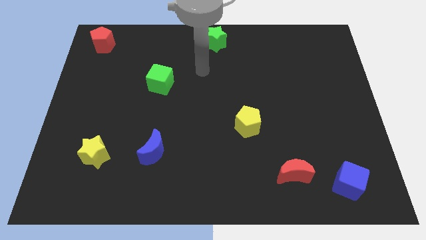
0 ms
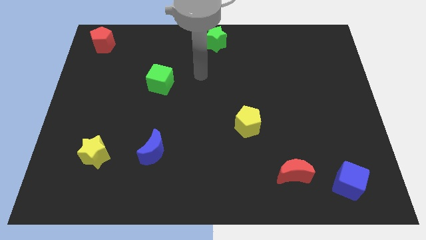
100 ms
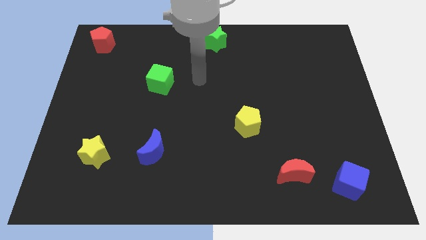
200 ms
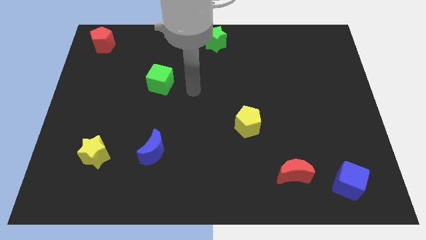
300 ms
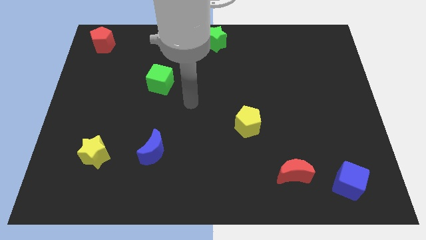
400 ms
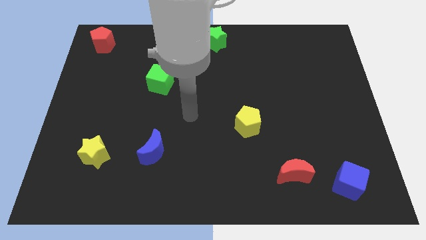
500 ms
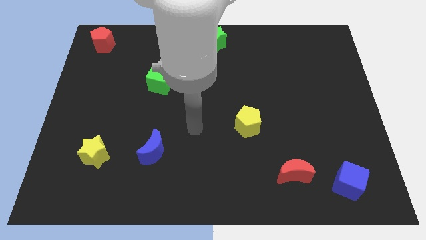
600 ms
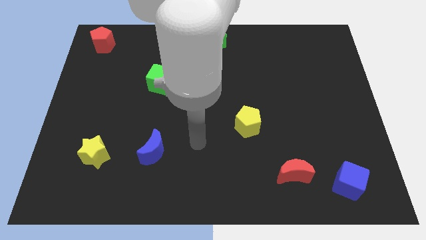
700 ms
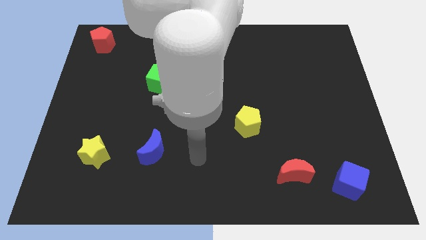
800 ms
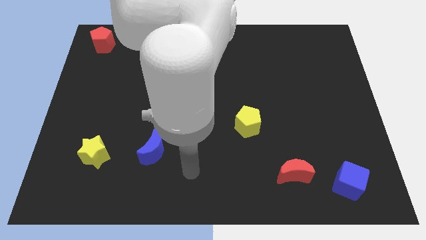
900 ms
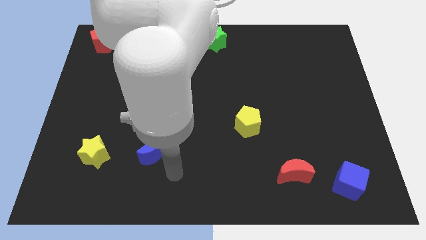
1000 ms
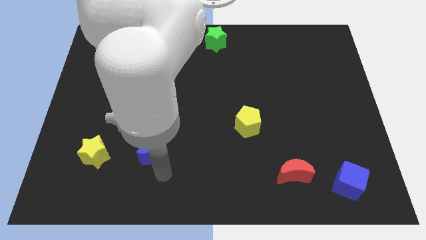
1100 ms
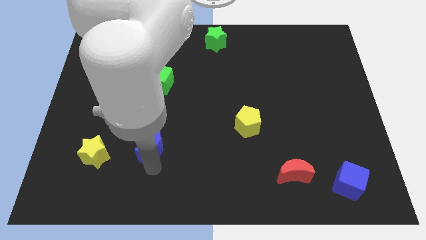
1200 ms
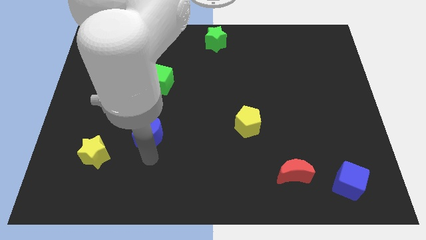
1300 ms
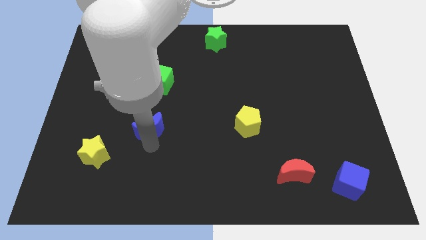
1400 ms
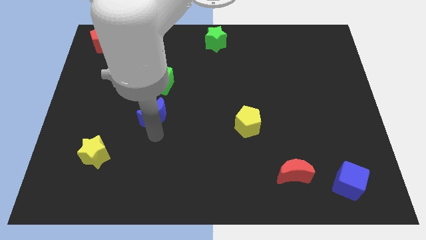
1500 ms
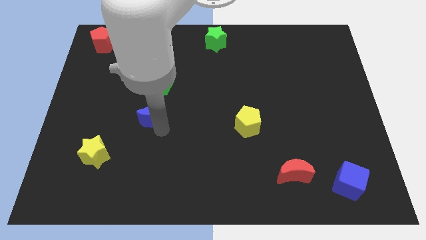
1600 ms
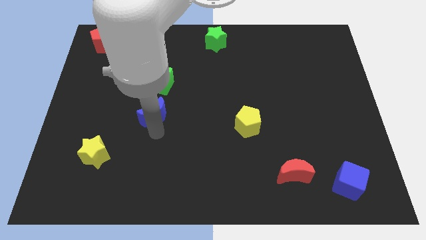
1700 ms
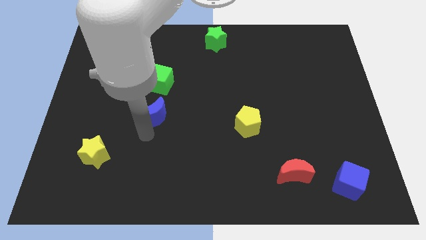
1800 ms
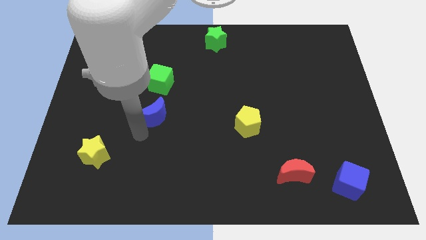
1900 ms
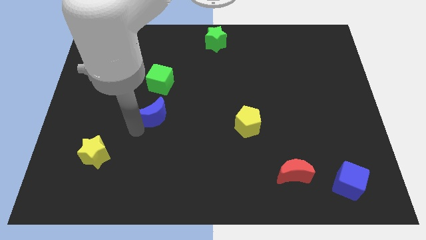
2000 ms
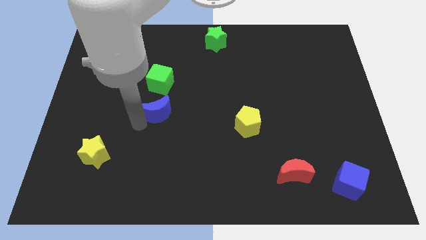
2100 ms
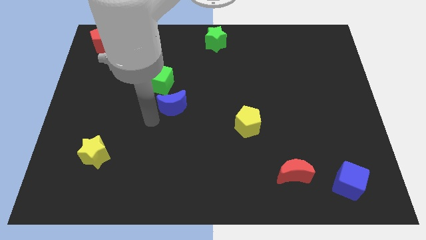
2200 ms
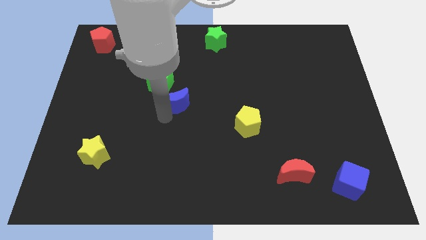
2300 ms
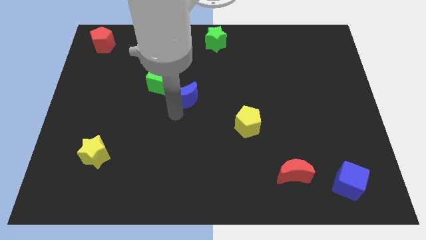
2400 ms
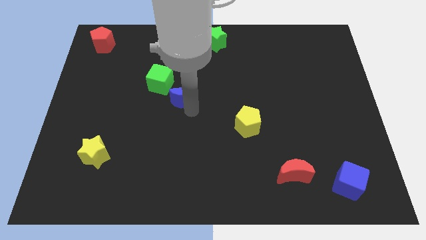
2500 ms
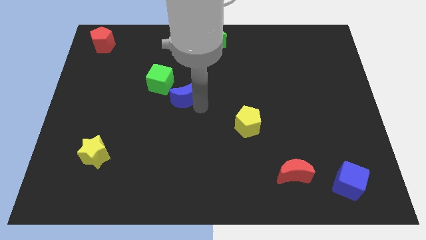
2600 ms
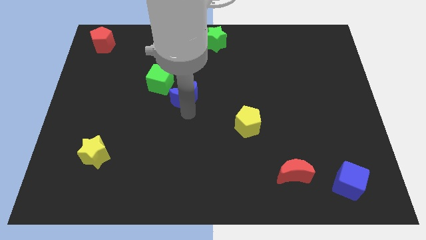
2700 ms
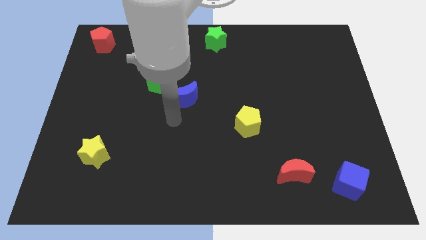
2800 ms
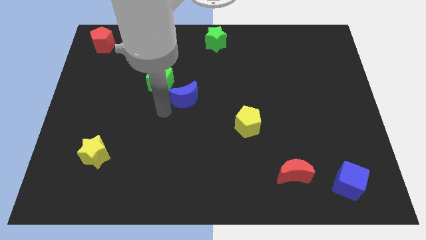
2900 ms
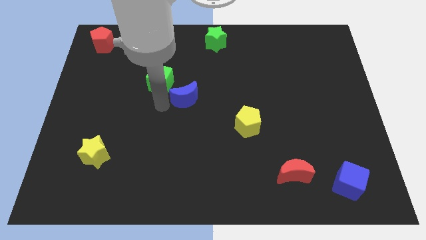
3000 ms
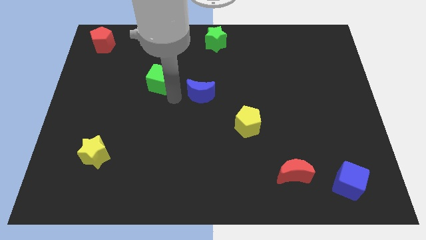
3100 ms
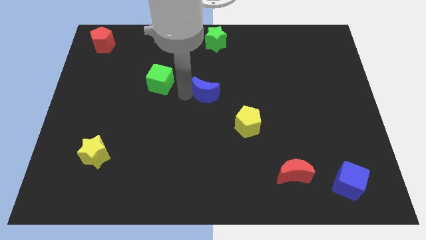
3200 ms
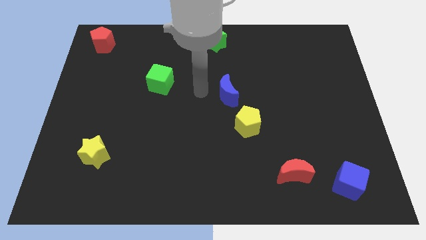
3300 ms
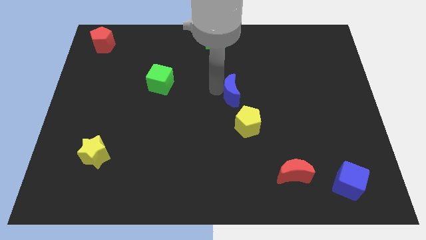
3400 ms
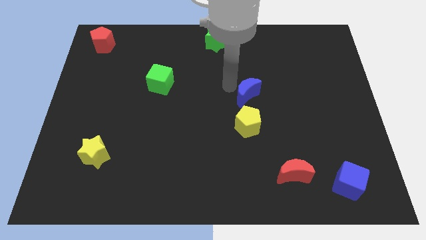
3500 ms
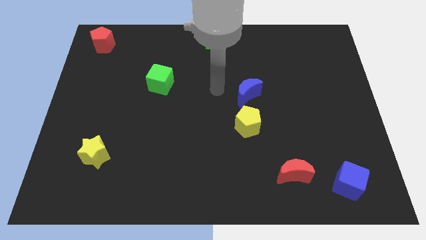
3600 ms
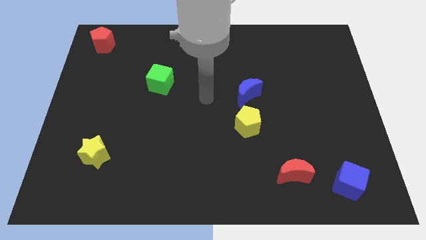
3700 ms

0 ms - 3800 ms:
place blue moon above yellow pentagon

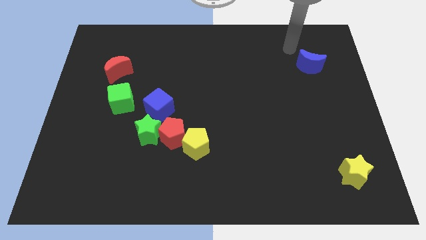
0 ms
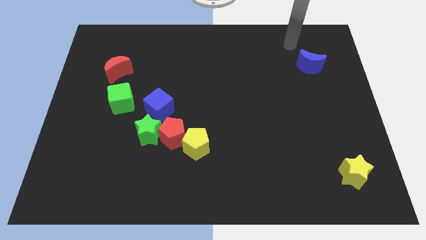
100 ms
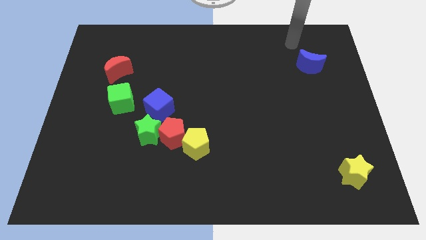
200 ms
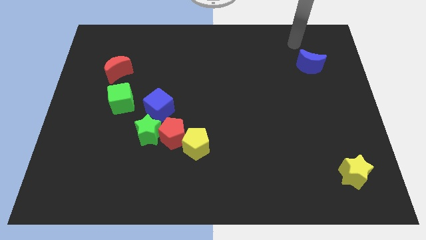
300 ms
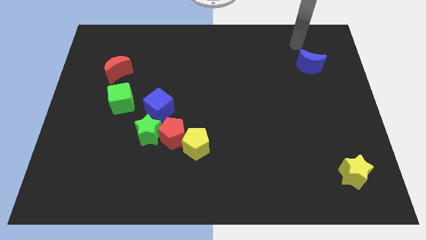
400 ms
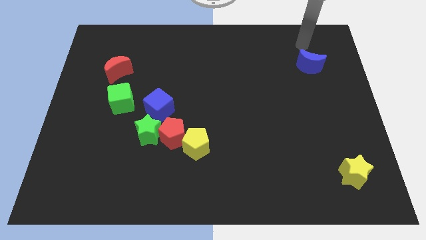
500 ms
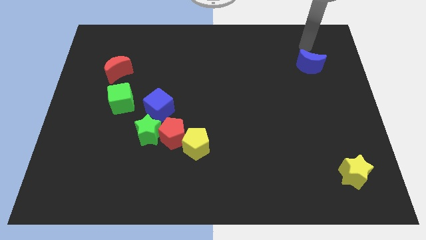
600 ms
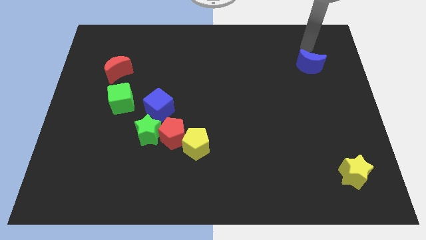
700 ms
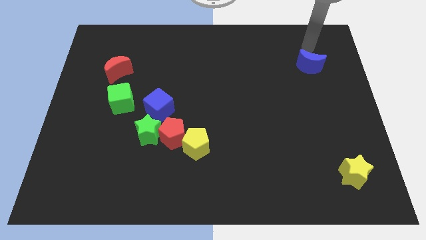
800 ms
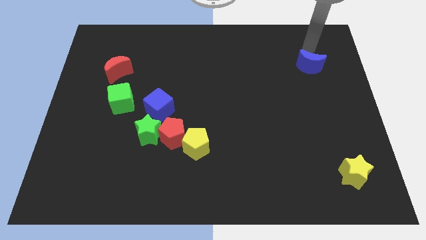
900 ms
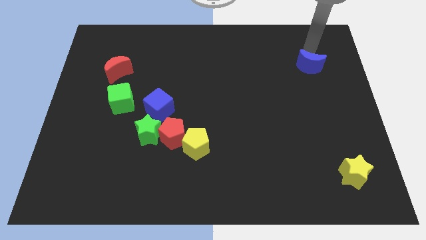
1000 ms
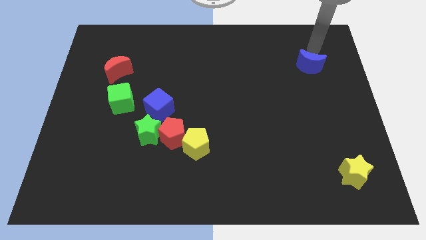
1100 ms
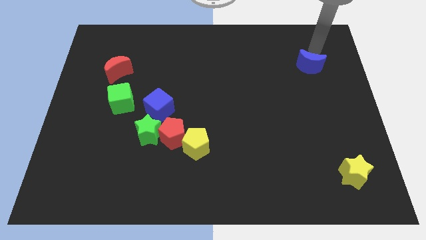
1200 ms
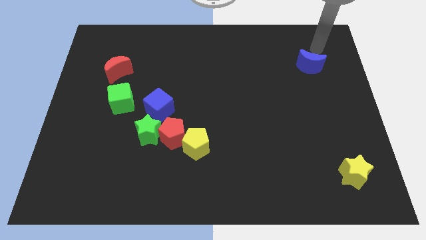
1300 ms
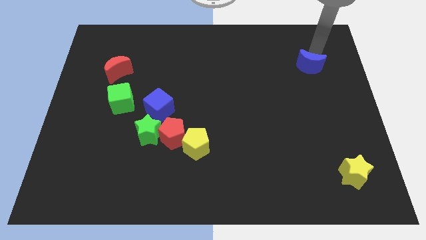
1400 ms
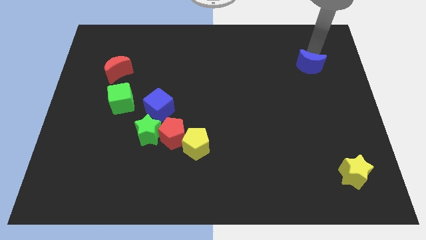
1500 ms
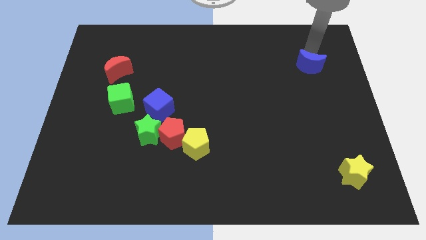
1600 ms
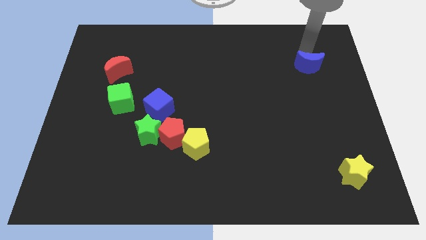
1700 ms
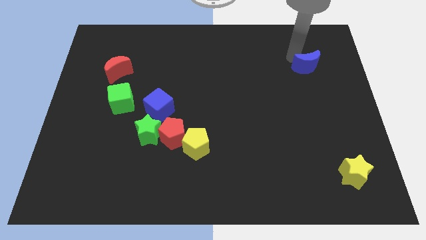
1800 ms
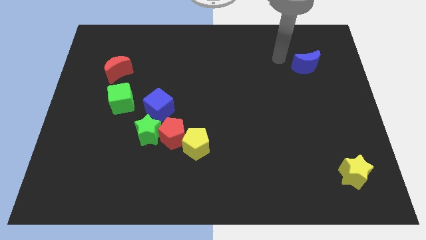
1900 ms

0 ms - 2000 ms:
touch the blue moon

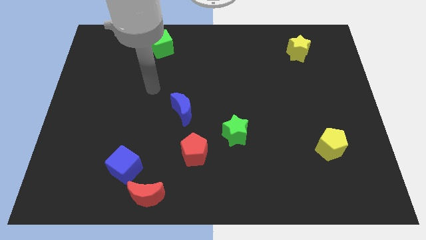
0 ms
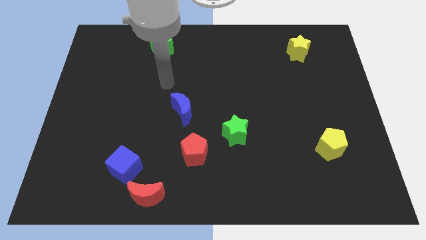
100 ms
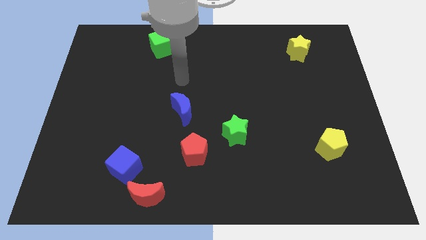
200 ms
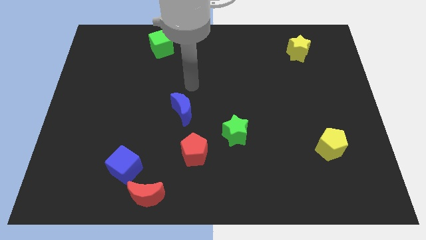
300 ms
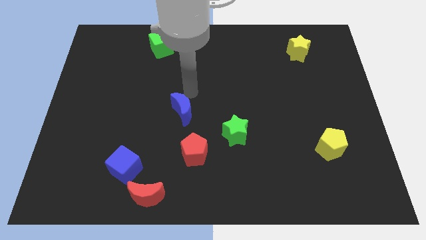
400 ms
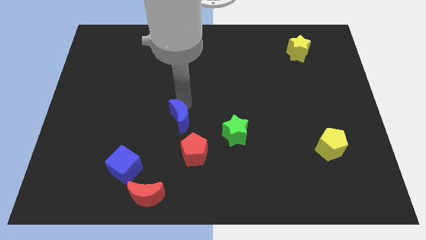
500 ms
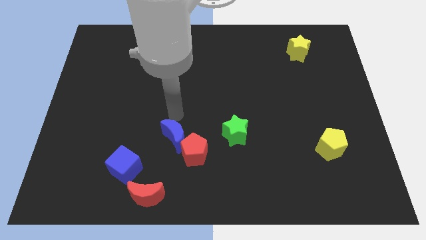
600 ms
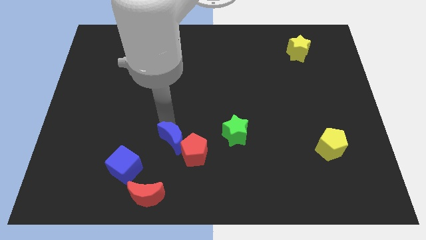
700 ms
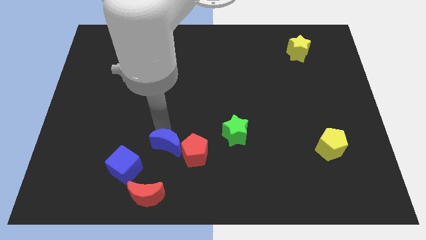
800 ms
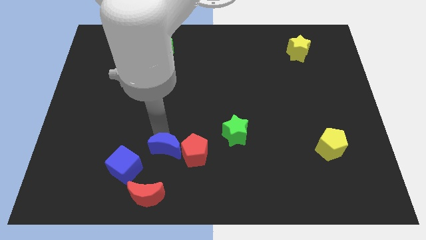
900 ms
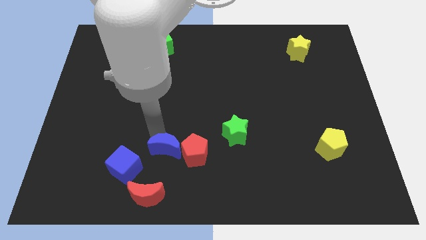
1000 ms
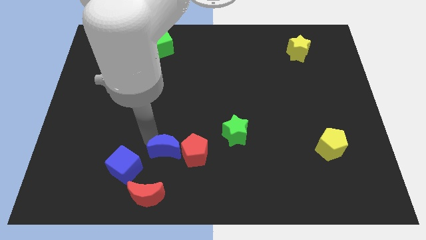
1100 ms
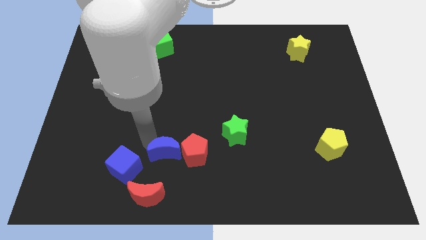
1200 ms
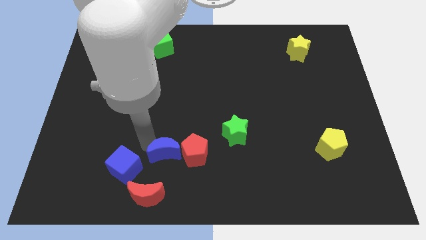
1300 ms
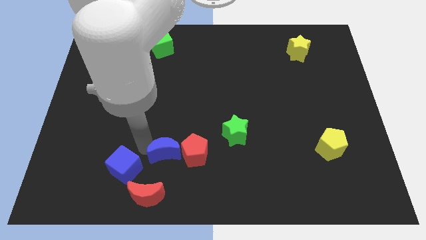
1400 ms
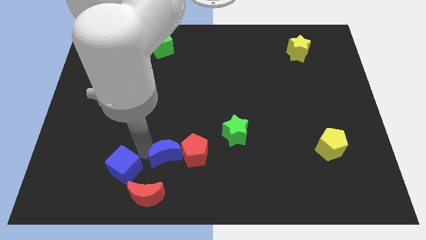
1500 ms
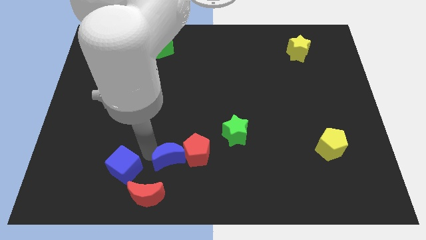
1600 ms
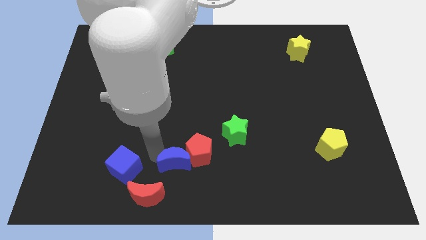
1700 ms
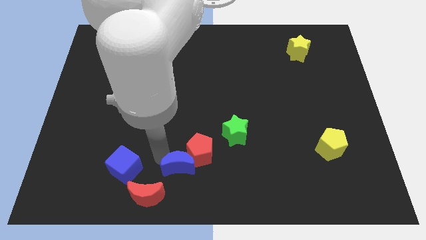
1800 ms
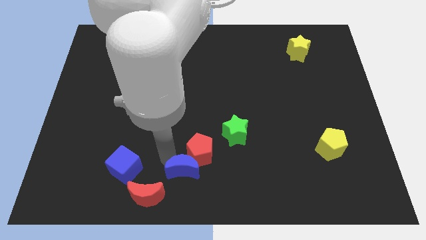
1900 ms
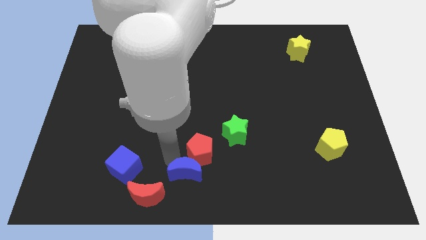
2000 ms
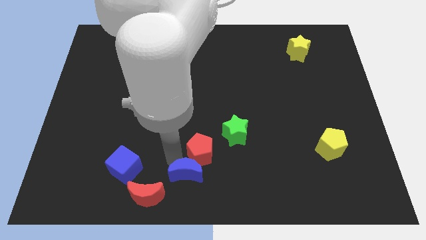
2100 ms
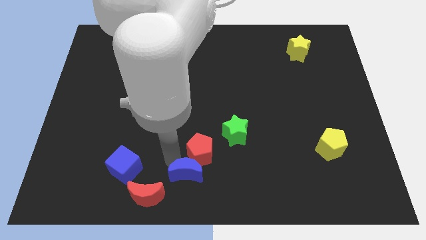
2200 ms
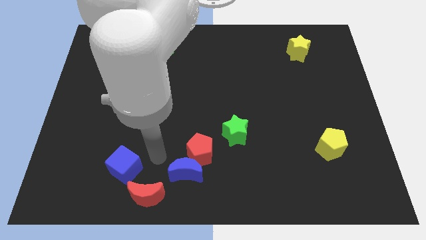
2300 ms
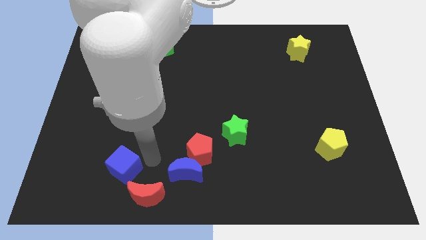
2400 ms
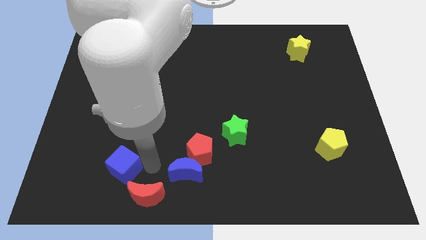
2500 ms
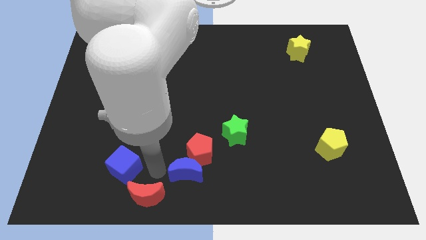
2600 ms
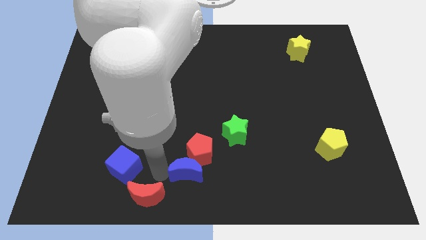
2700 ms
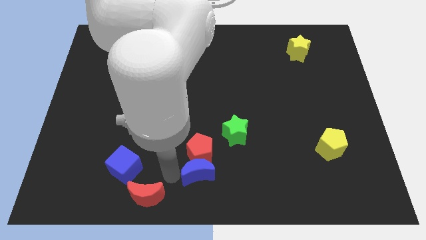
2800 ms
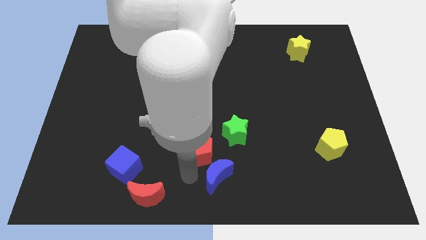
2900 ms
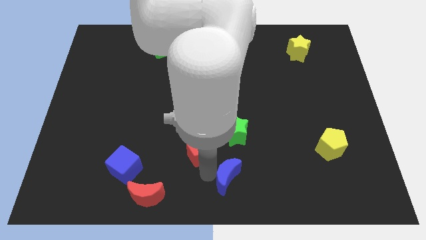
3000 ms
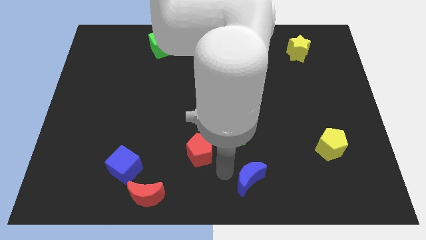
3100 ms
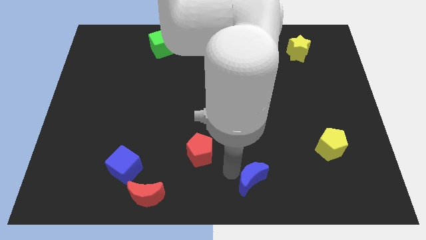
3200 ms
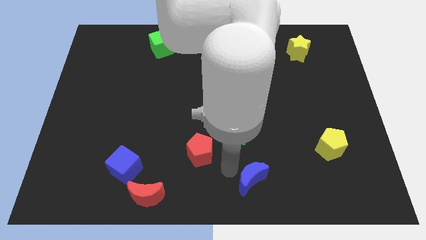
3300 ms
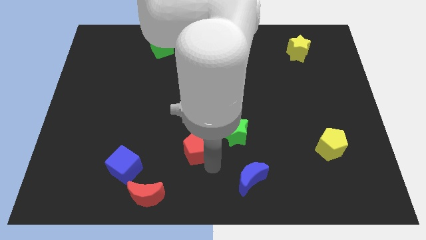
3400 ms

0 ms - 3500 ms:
place the blue moon towards the bottom right of the red pentagon
